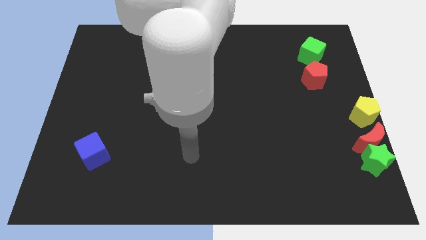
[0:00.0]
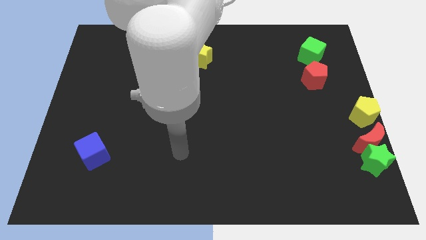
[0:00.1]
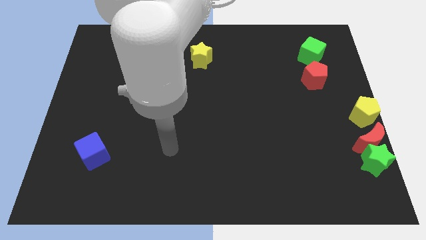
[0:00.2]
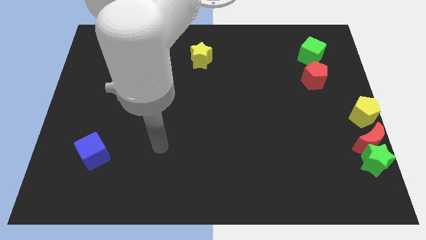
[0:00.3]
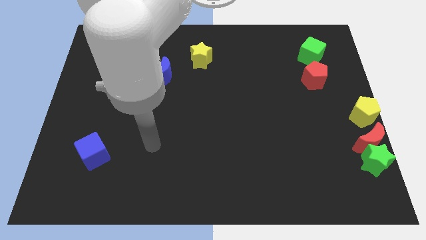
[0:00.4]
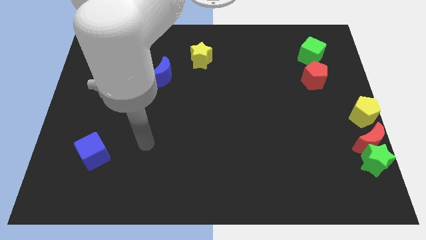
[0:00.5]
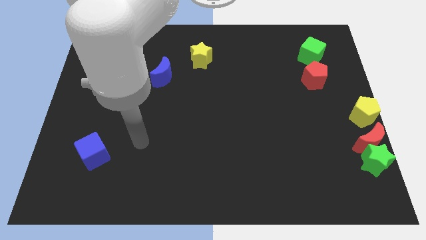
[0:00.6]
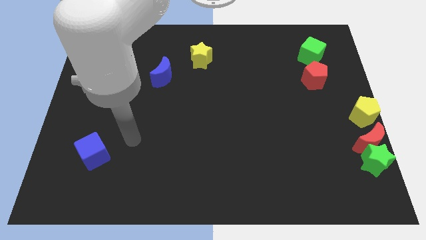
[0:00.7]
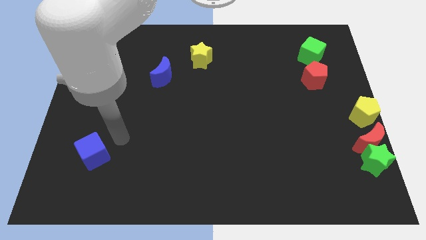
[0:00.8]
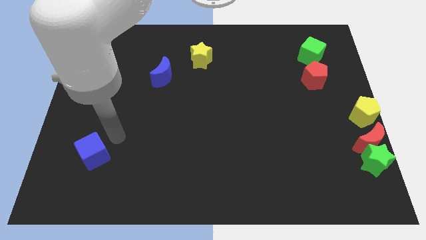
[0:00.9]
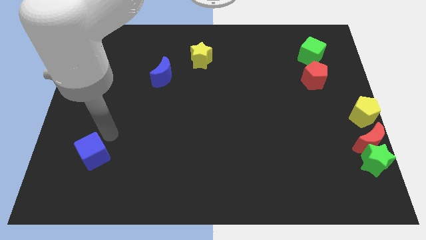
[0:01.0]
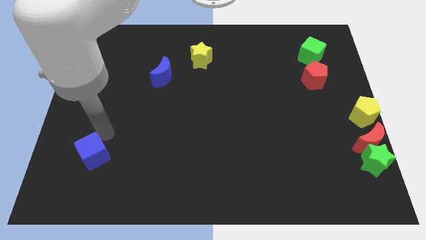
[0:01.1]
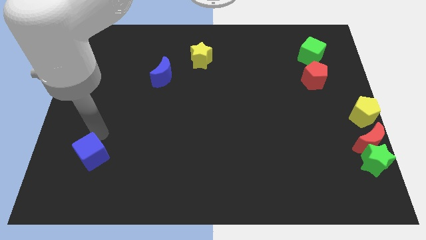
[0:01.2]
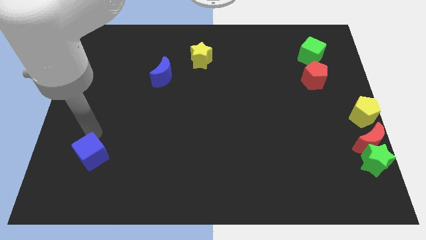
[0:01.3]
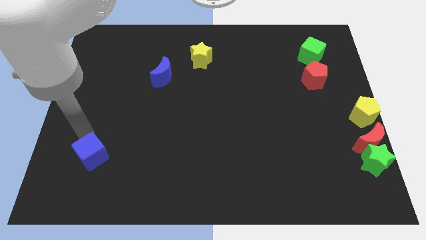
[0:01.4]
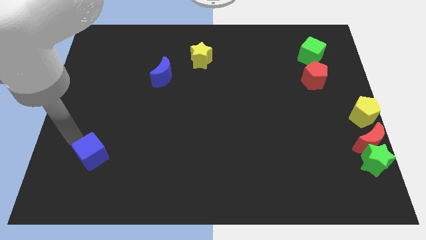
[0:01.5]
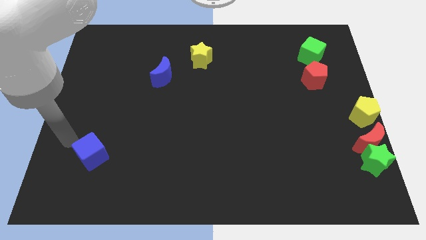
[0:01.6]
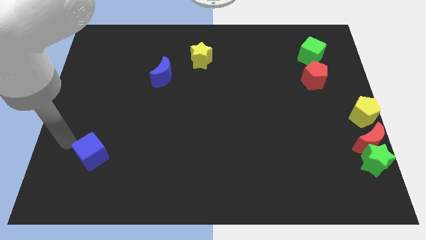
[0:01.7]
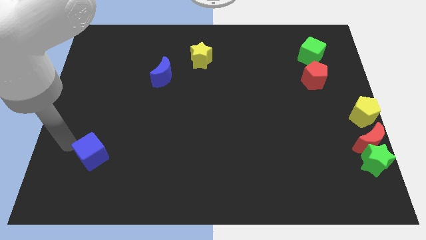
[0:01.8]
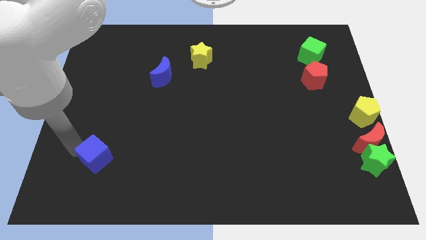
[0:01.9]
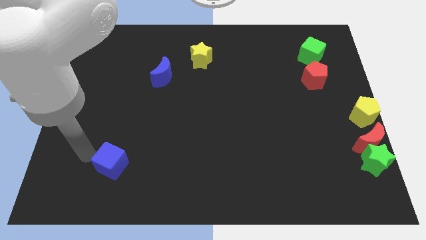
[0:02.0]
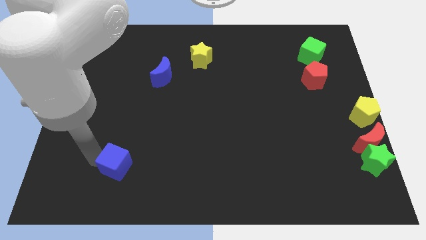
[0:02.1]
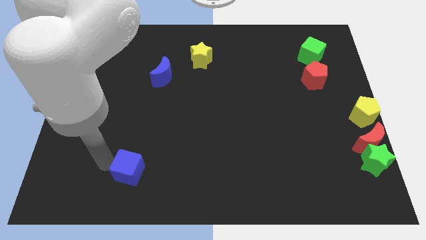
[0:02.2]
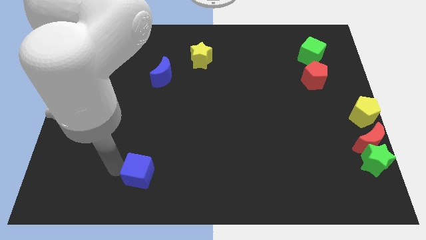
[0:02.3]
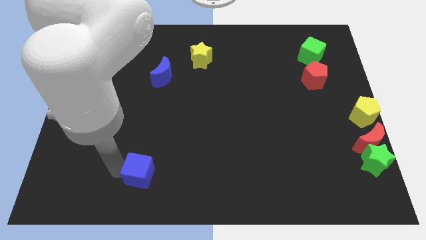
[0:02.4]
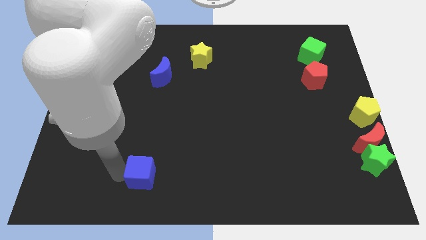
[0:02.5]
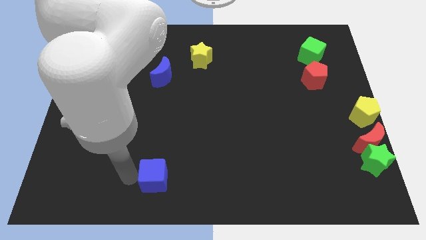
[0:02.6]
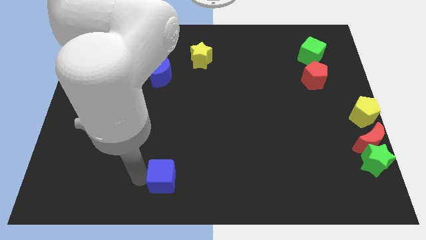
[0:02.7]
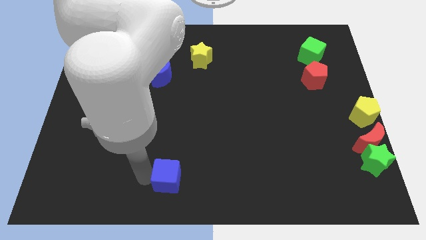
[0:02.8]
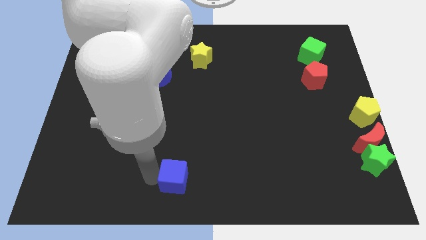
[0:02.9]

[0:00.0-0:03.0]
move blue cube below the blue moon

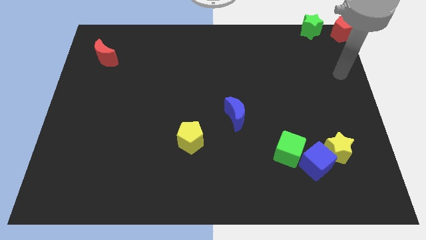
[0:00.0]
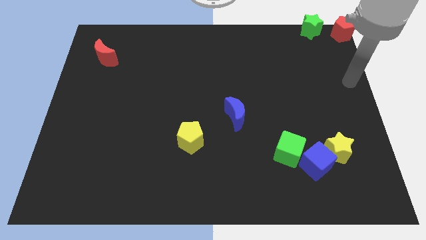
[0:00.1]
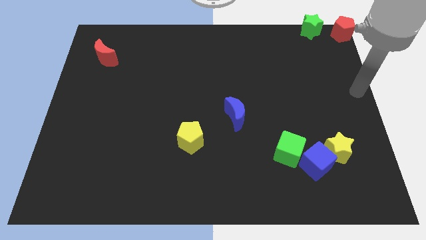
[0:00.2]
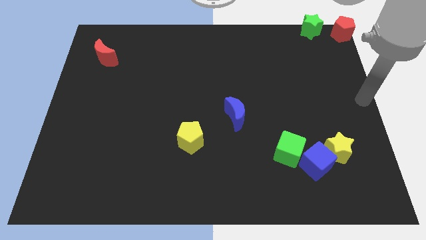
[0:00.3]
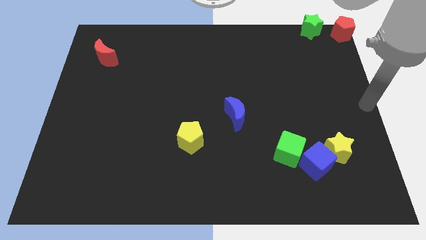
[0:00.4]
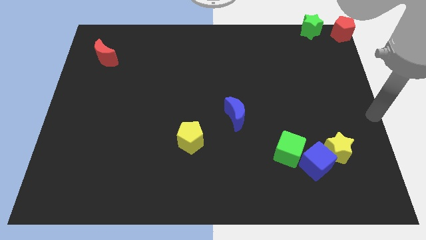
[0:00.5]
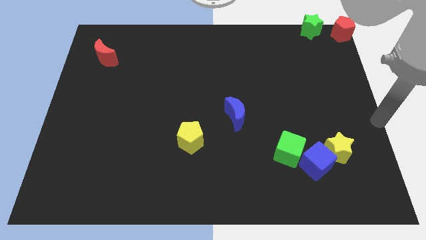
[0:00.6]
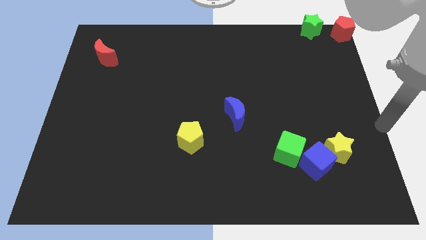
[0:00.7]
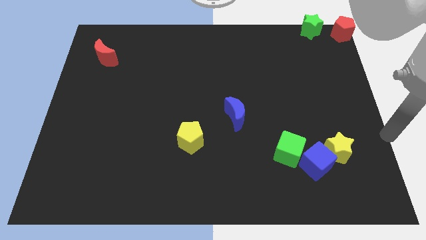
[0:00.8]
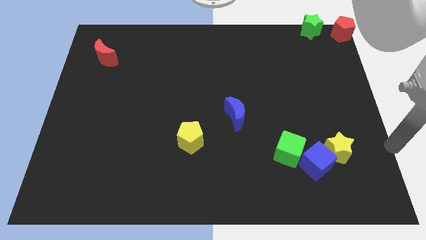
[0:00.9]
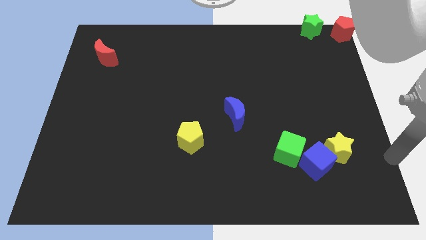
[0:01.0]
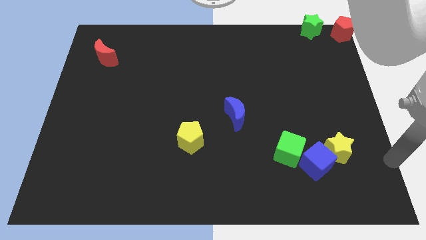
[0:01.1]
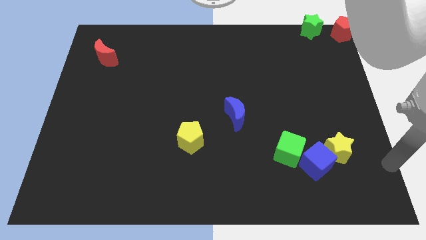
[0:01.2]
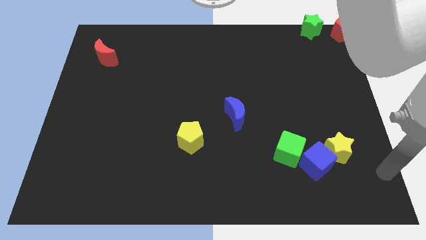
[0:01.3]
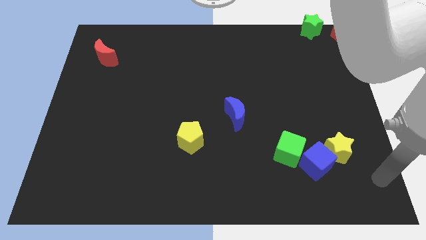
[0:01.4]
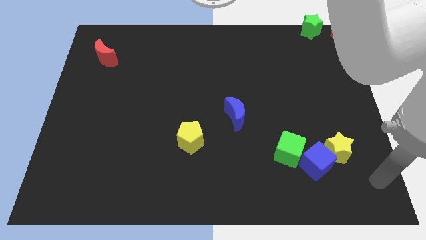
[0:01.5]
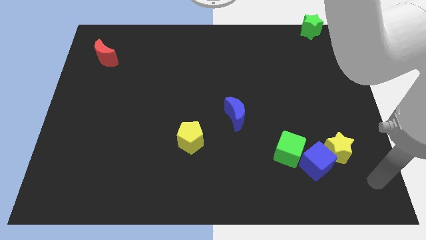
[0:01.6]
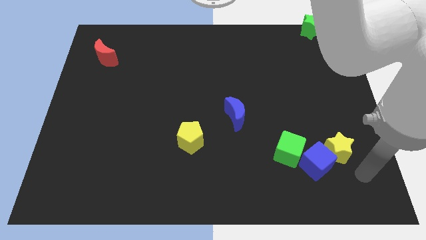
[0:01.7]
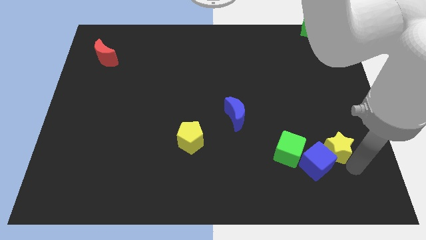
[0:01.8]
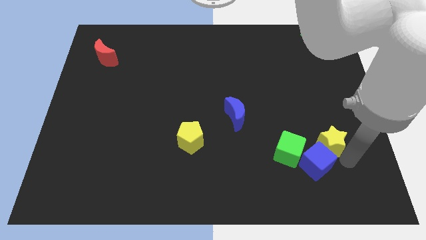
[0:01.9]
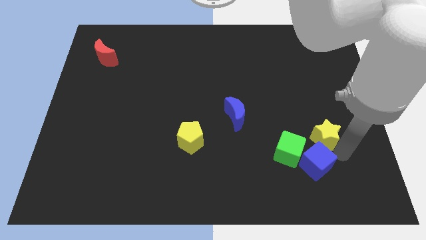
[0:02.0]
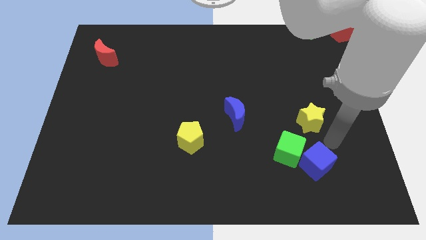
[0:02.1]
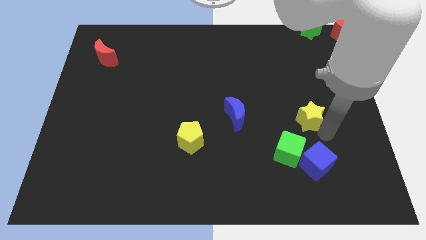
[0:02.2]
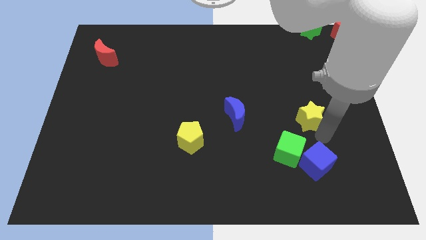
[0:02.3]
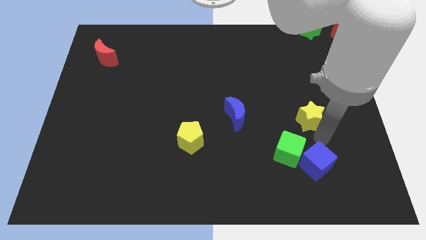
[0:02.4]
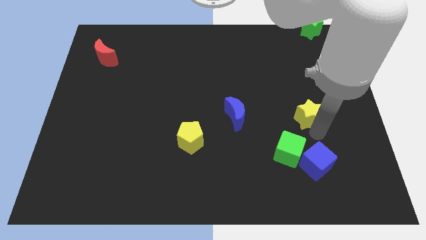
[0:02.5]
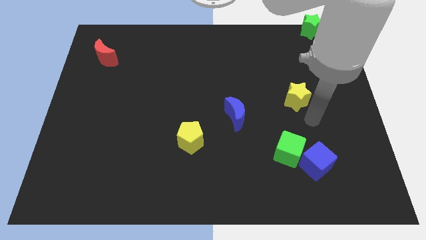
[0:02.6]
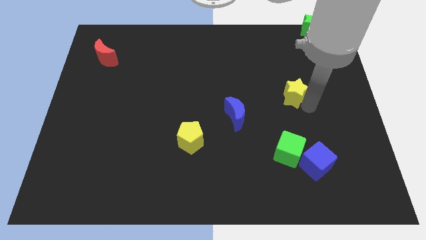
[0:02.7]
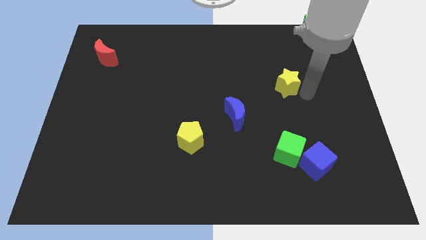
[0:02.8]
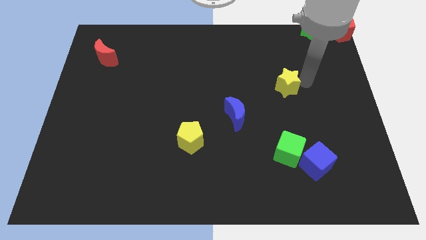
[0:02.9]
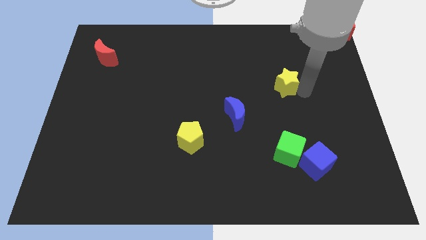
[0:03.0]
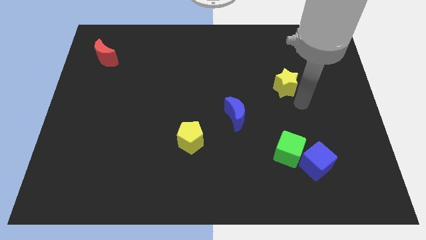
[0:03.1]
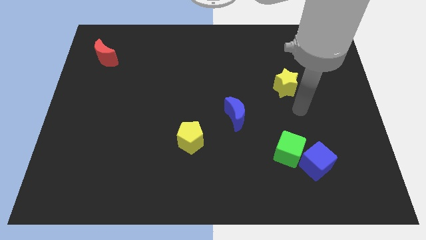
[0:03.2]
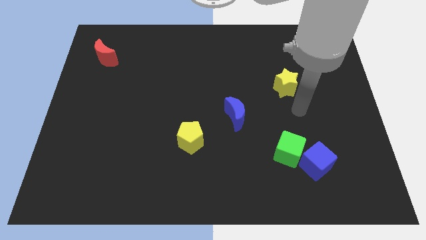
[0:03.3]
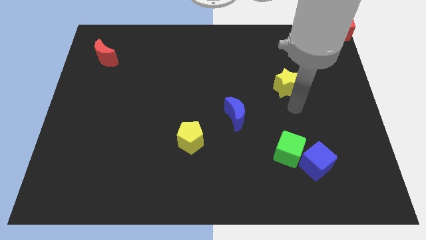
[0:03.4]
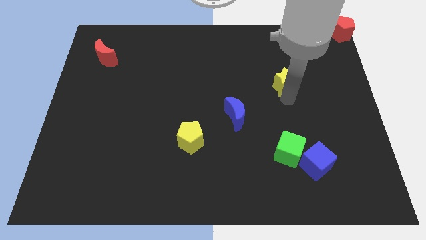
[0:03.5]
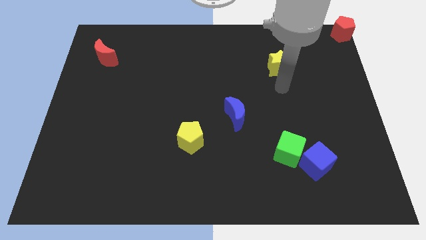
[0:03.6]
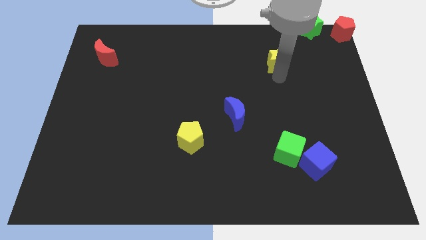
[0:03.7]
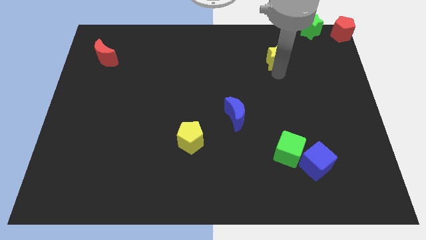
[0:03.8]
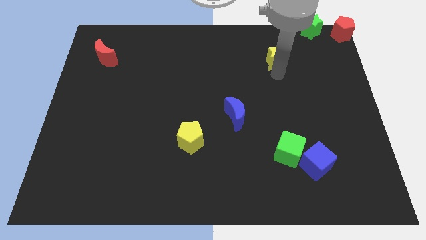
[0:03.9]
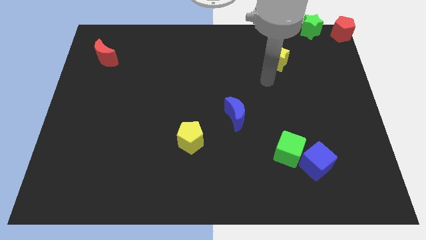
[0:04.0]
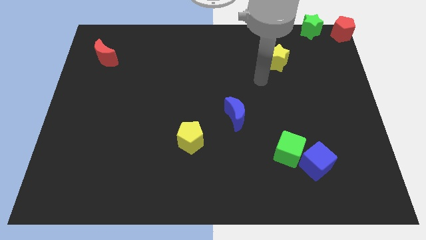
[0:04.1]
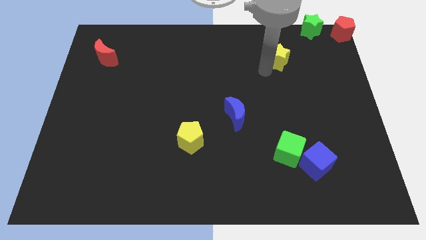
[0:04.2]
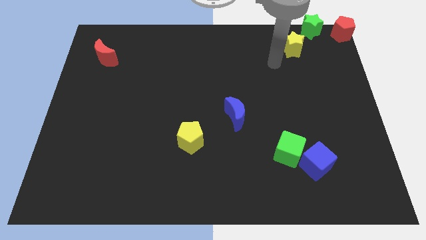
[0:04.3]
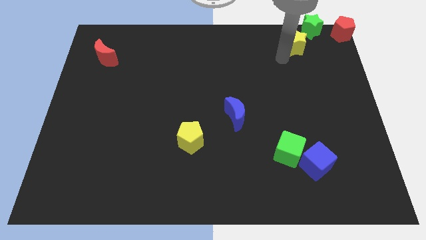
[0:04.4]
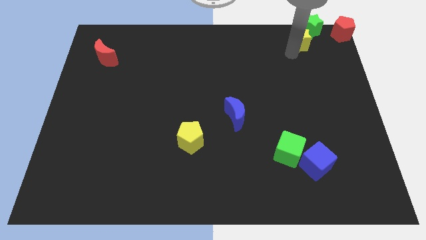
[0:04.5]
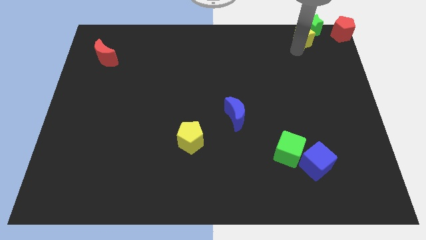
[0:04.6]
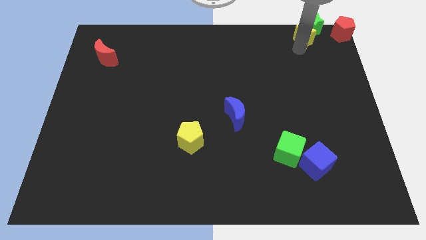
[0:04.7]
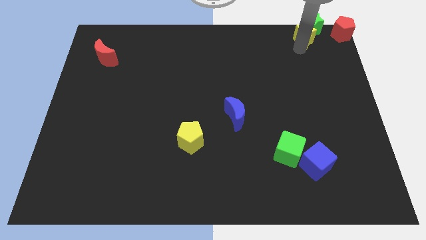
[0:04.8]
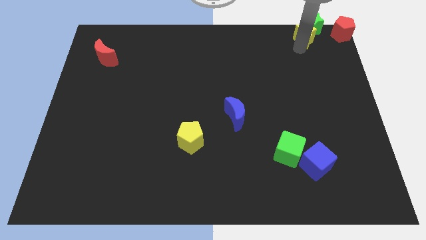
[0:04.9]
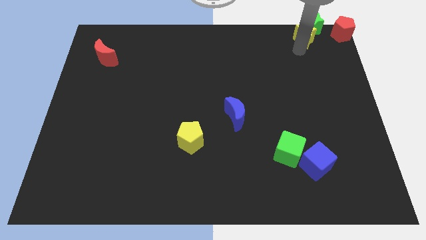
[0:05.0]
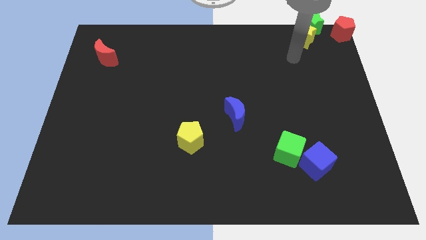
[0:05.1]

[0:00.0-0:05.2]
push the yellow star into the green star

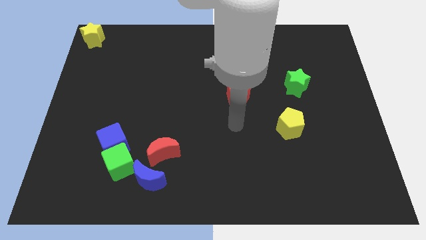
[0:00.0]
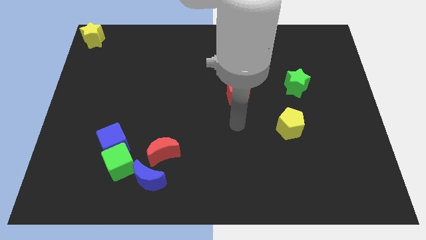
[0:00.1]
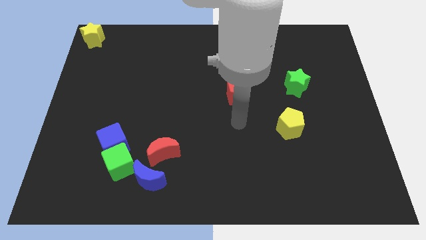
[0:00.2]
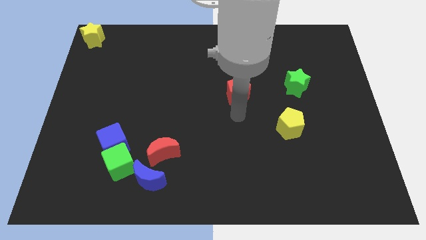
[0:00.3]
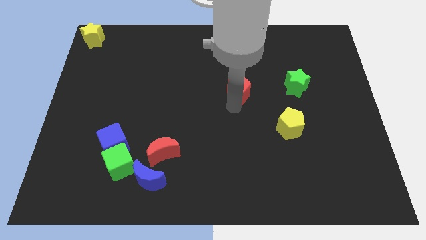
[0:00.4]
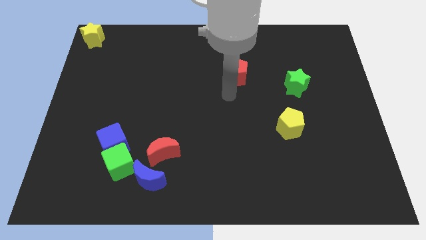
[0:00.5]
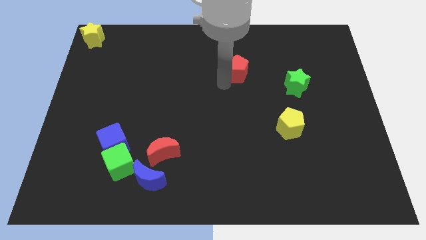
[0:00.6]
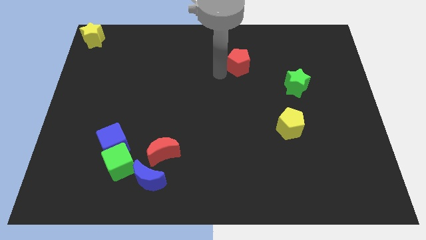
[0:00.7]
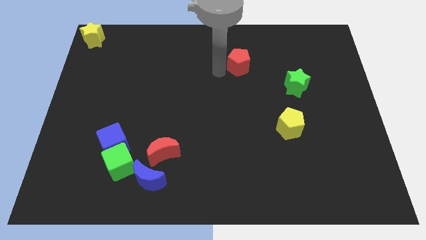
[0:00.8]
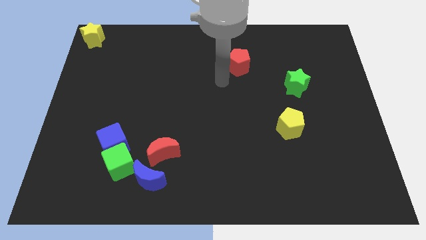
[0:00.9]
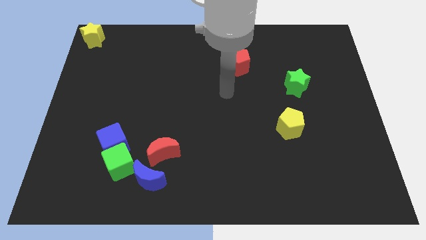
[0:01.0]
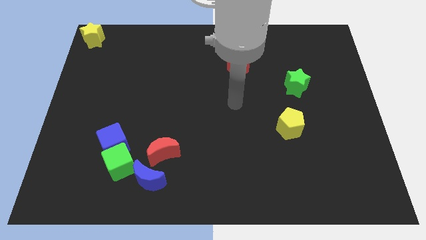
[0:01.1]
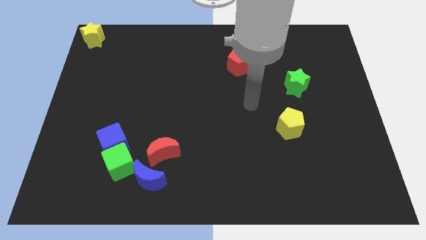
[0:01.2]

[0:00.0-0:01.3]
slightly move the red pentagon towards top side of the board
